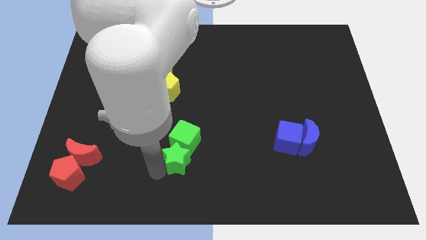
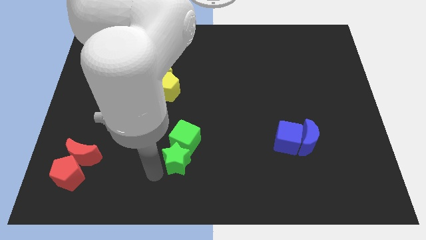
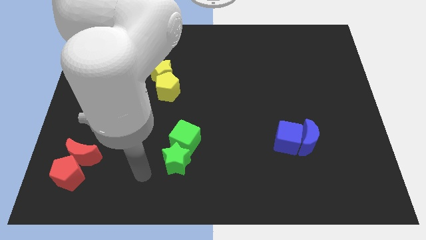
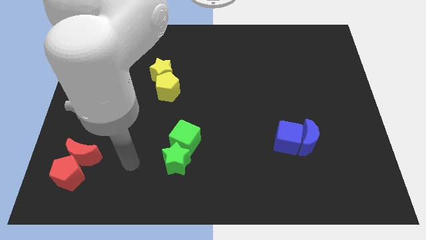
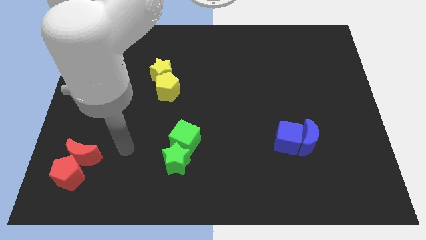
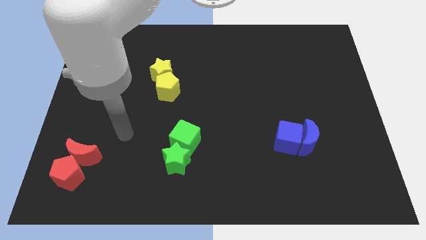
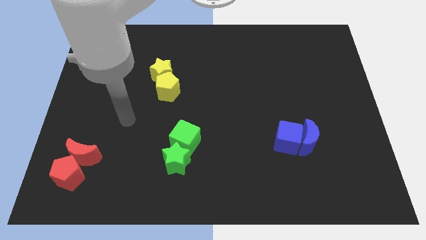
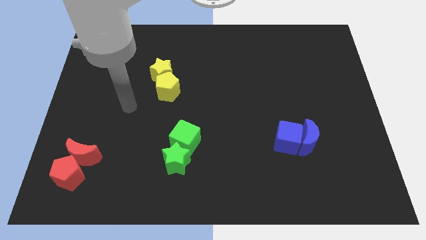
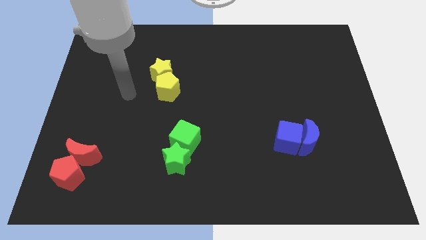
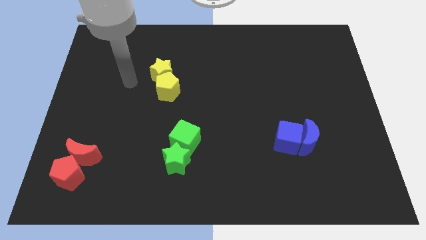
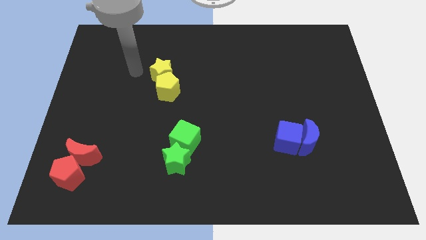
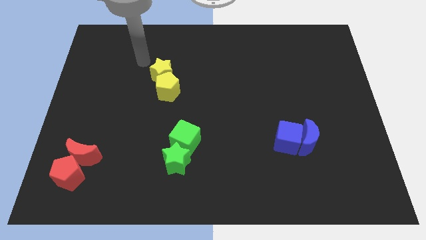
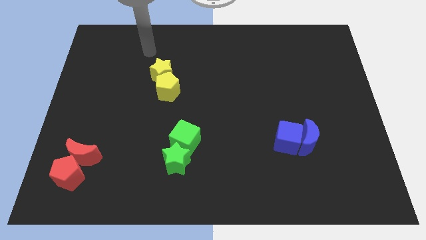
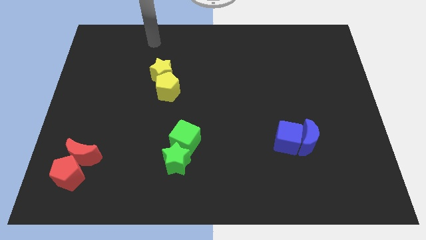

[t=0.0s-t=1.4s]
move the arm away from the green blocks

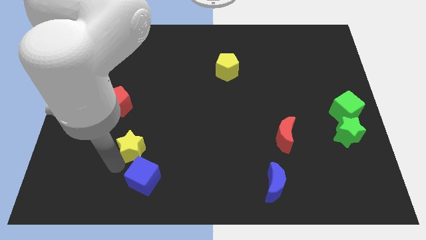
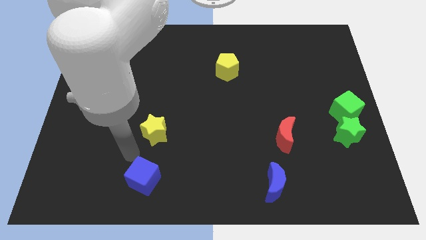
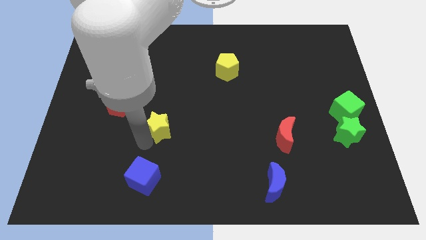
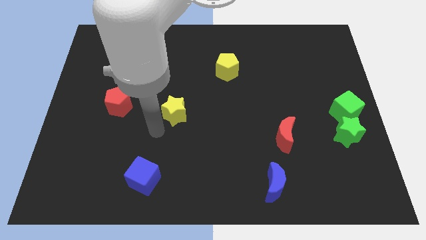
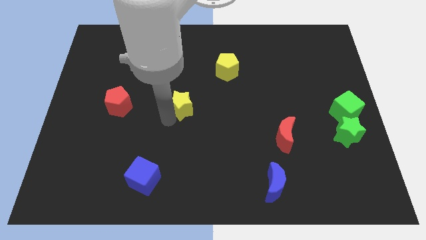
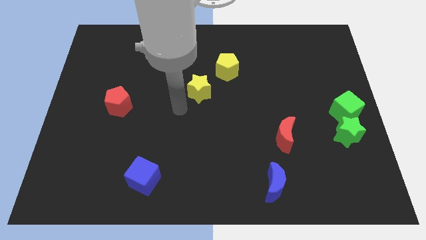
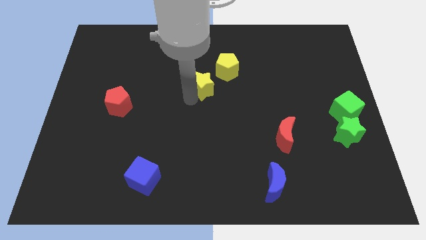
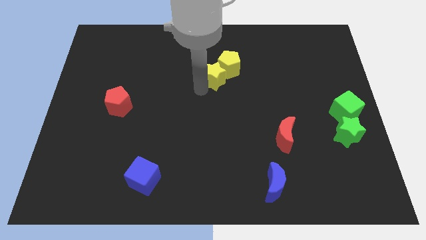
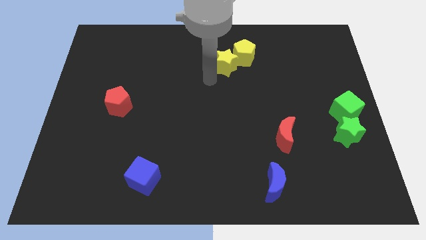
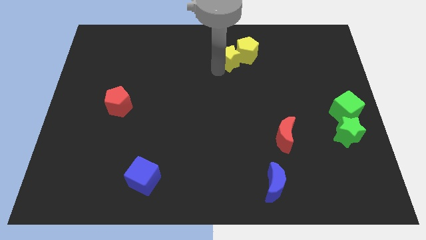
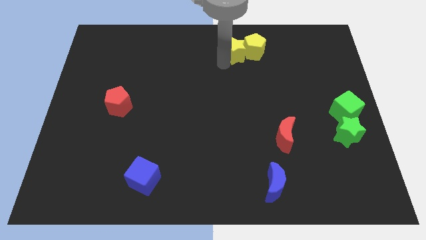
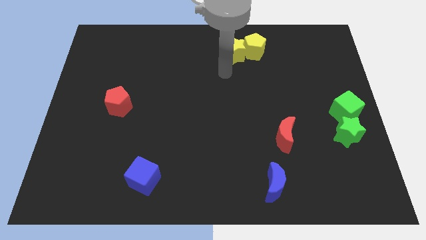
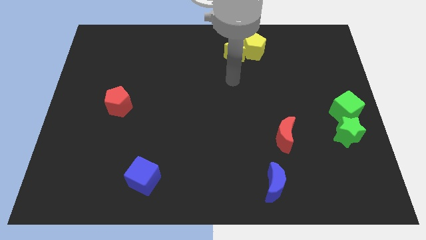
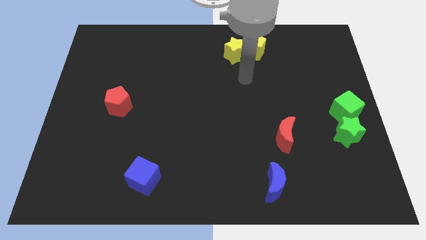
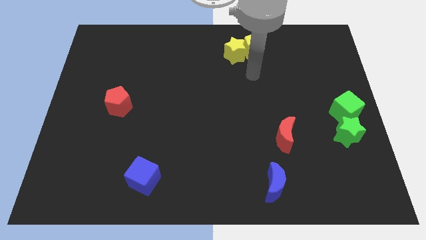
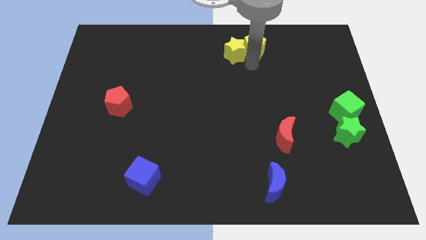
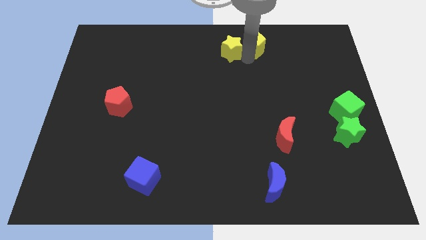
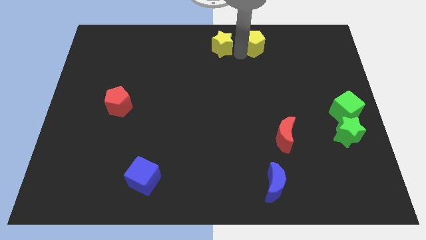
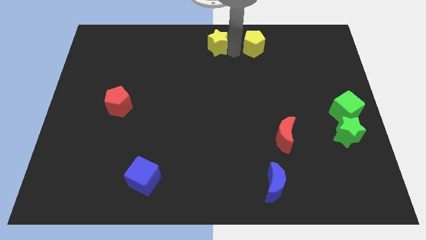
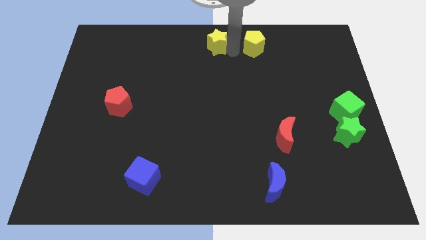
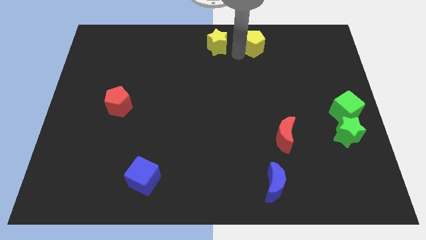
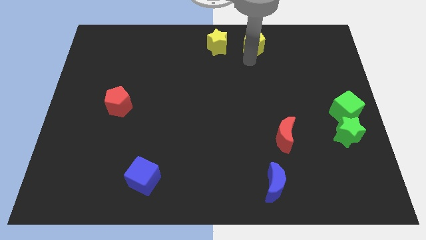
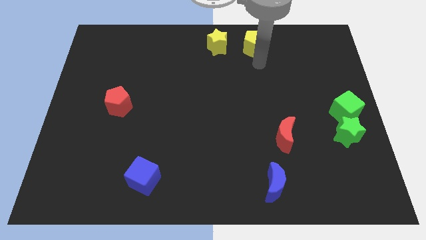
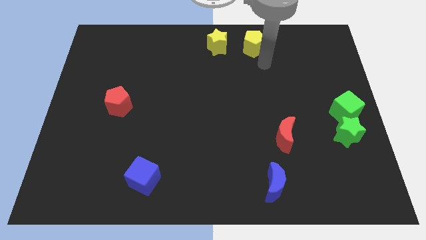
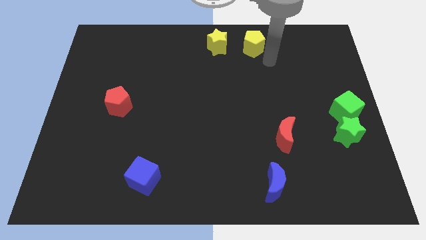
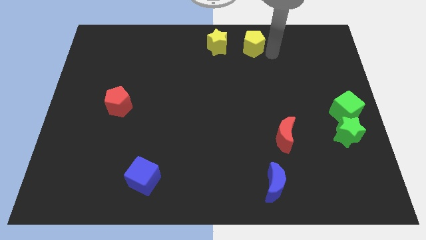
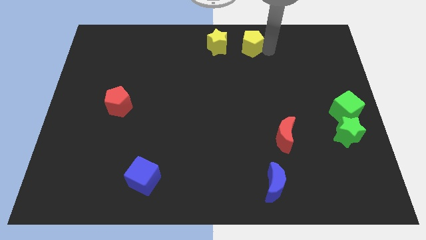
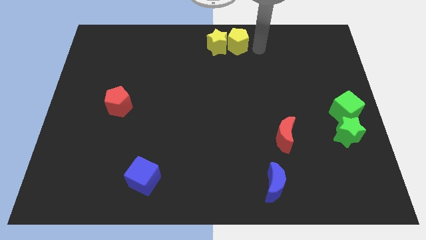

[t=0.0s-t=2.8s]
move yellow star to the top center

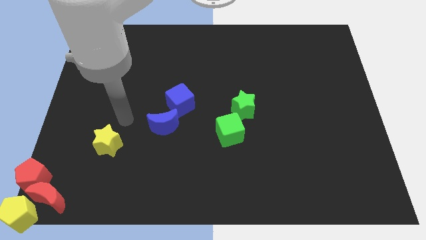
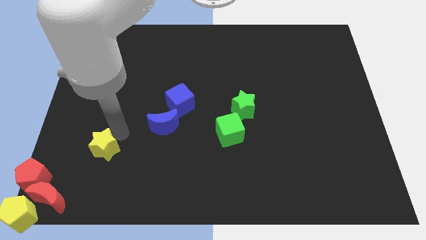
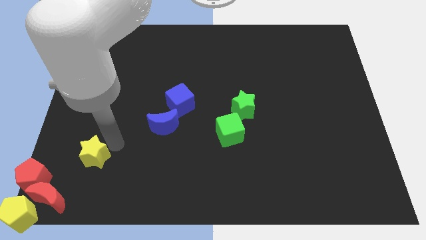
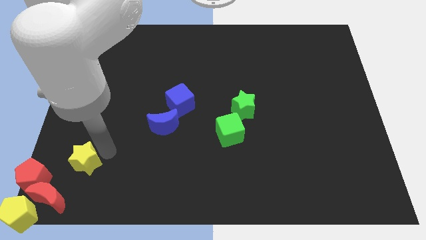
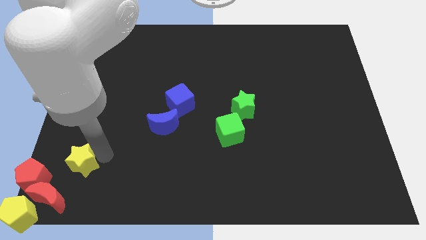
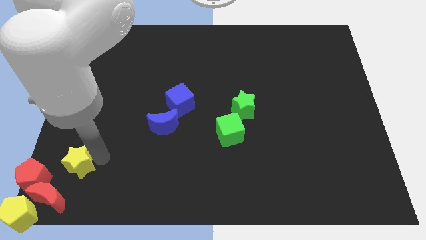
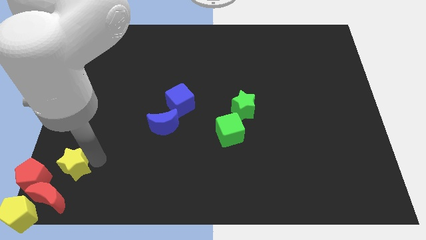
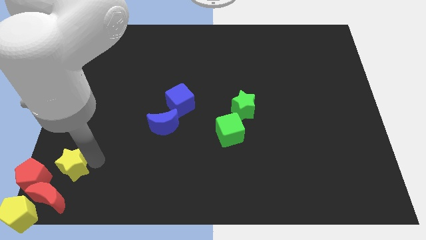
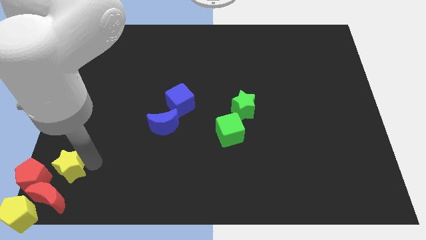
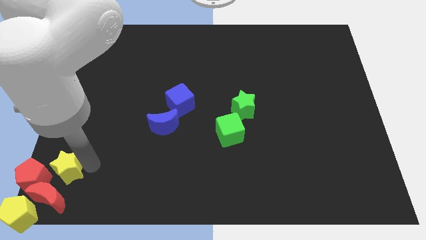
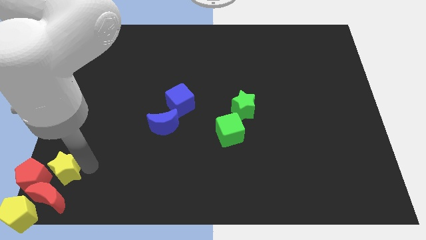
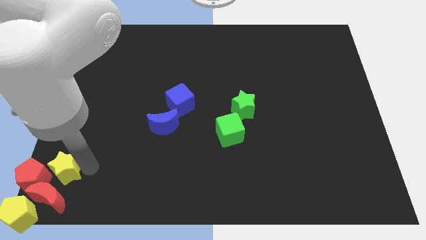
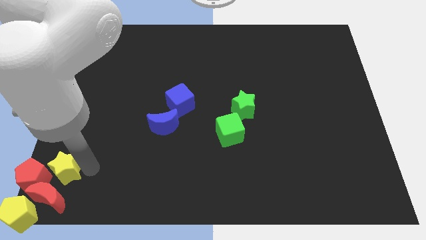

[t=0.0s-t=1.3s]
push the yellow star into the group of blocks

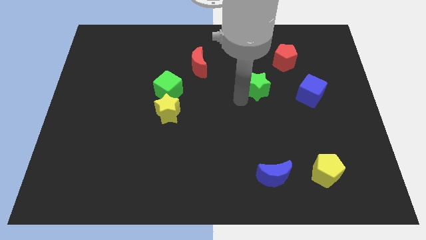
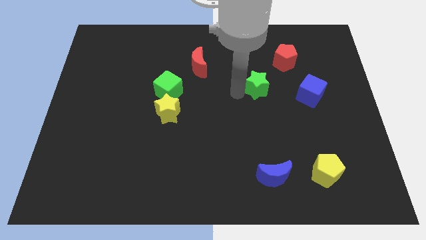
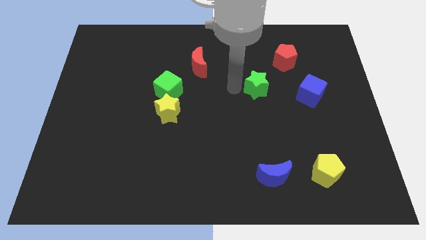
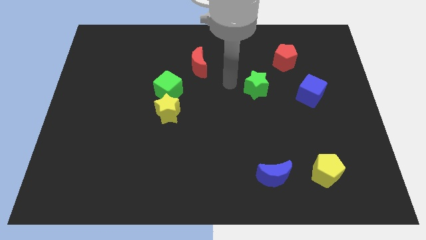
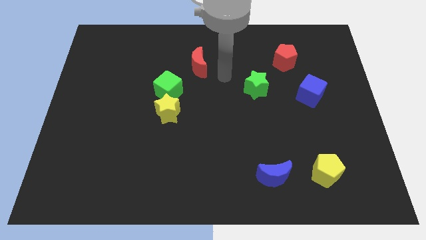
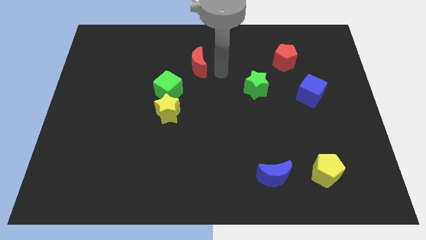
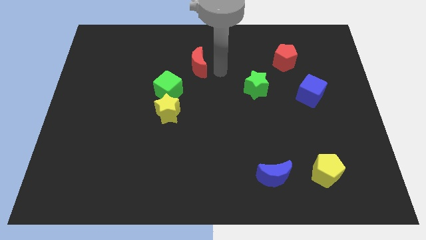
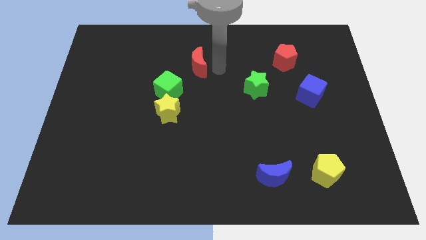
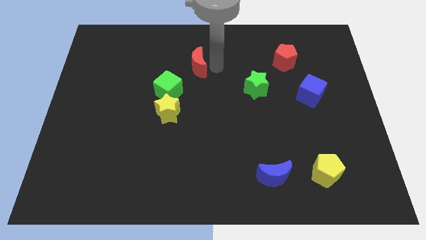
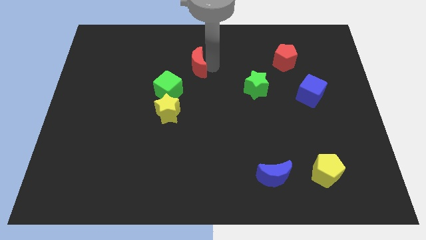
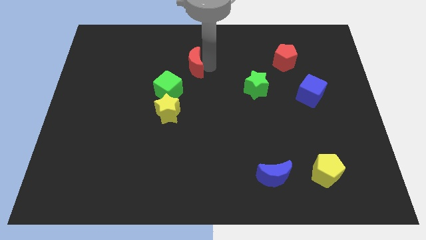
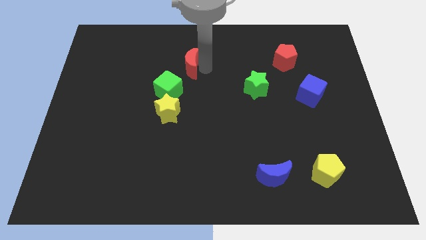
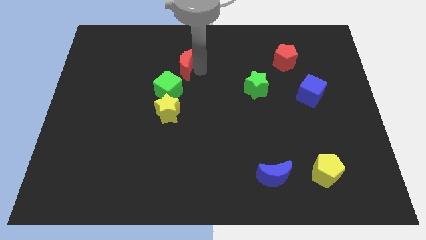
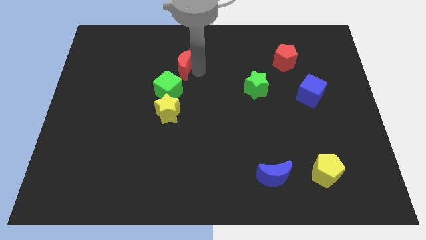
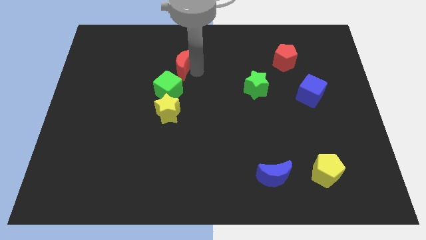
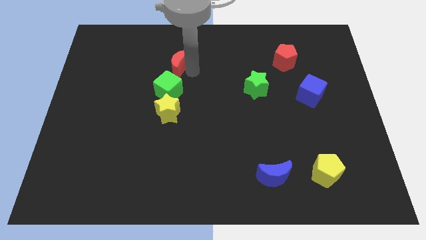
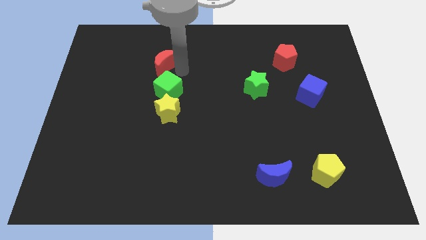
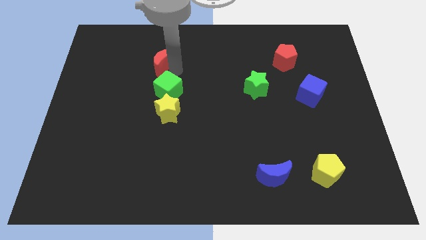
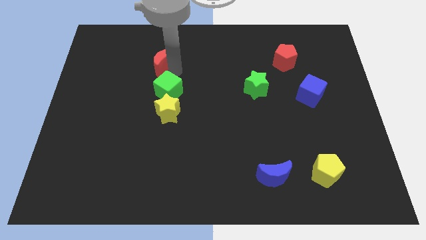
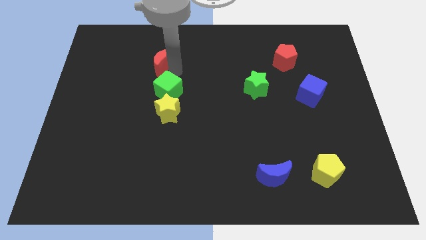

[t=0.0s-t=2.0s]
place red moon above green cube

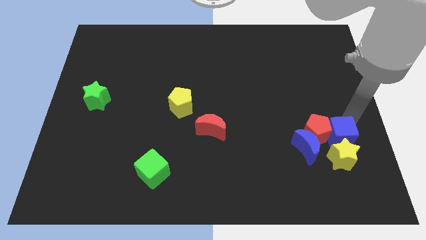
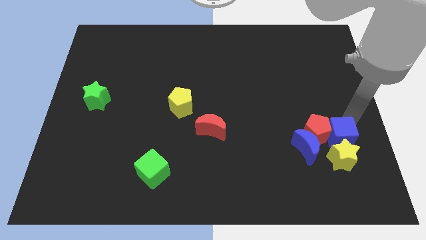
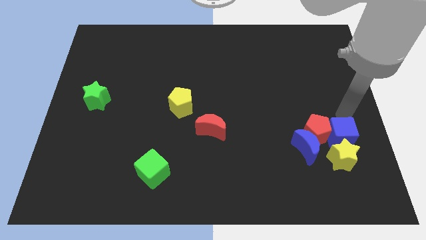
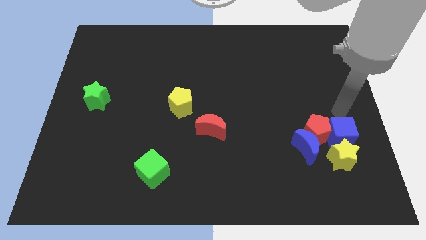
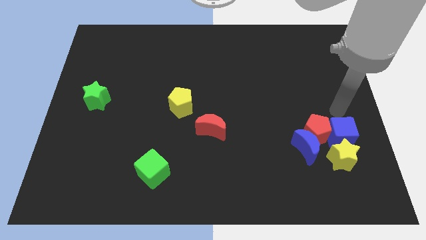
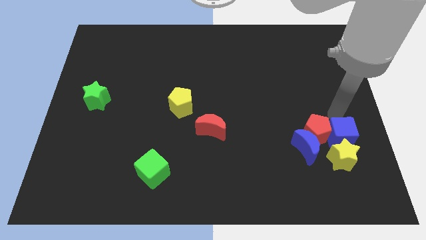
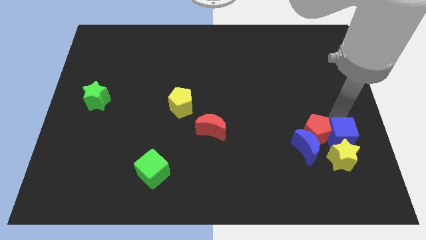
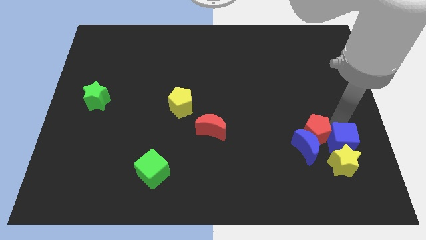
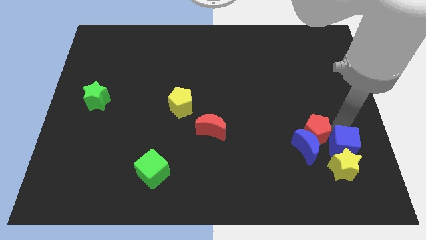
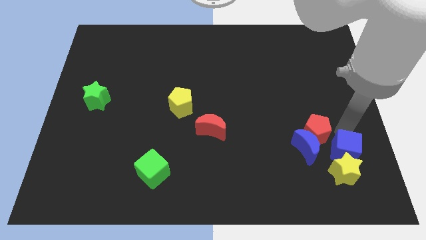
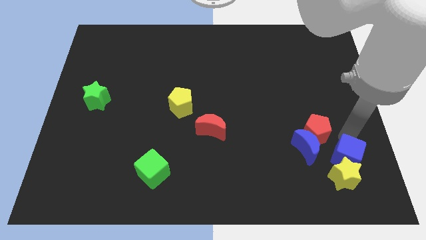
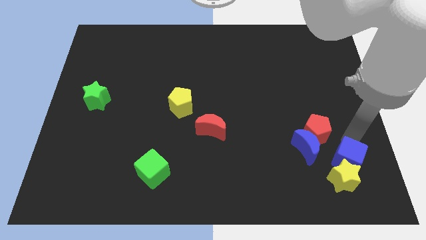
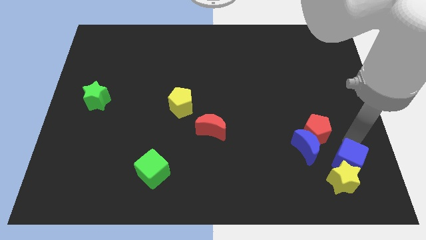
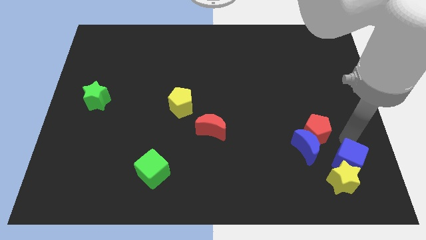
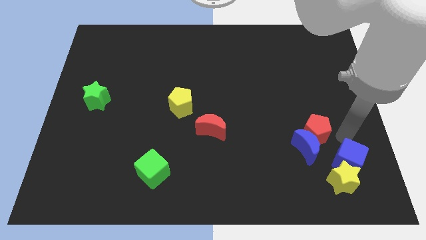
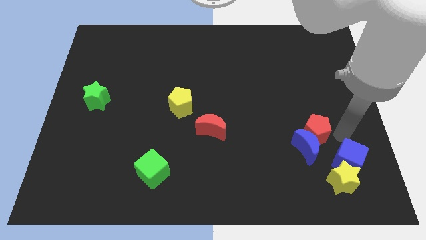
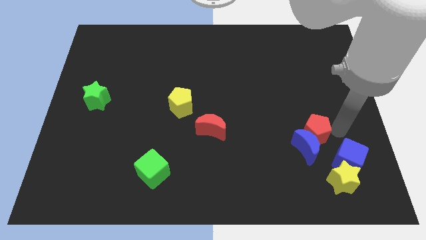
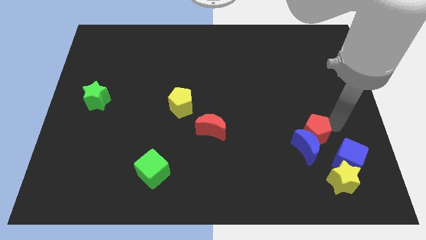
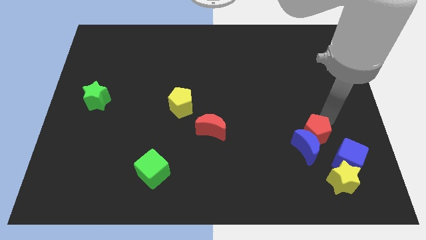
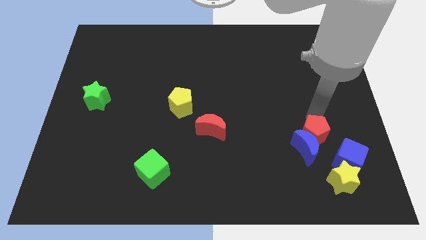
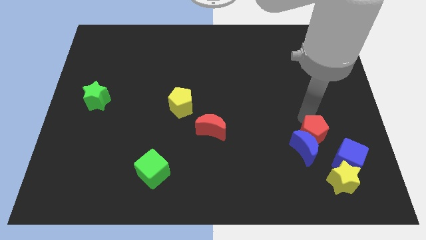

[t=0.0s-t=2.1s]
separate the blue cube from the red pentagon
